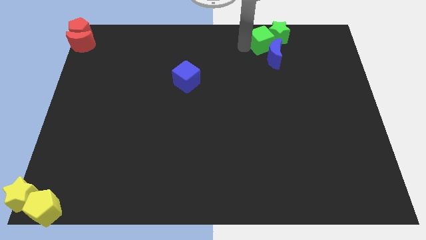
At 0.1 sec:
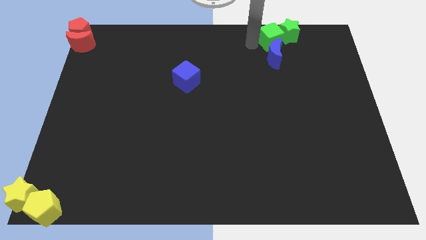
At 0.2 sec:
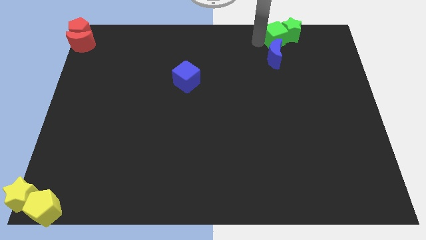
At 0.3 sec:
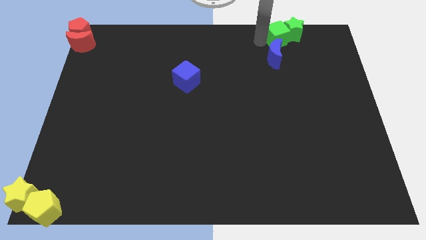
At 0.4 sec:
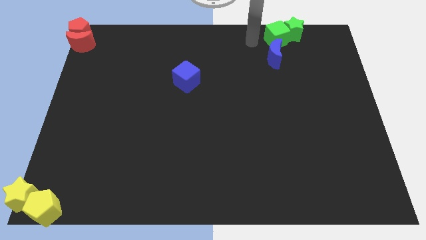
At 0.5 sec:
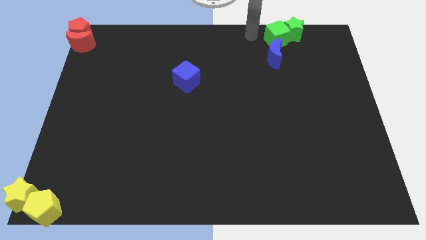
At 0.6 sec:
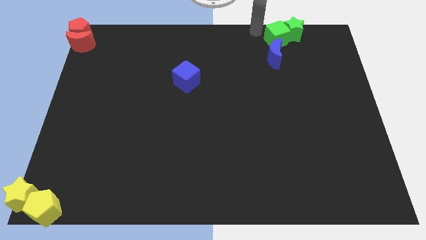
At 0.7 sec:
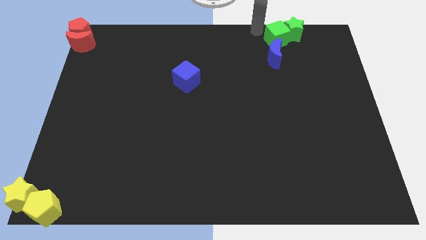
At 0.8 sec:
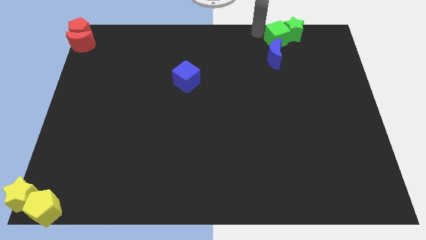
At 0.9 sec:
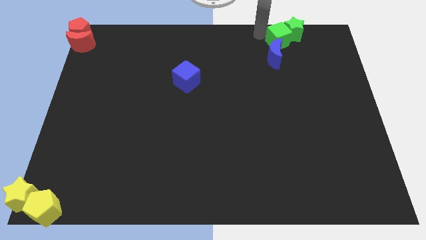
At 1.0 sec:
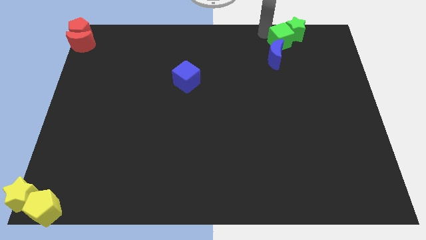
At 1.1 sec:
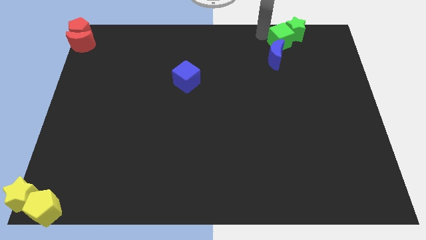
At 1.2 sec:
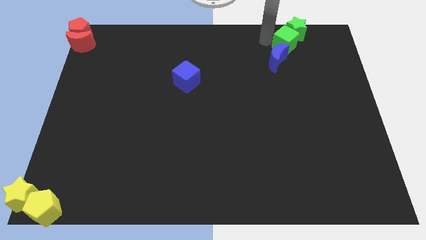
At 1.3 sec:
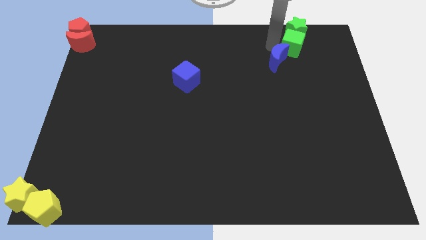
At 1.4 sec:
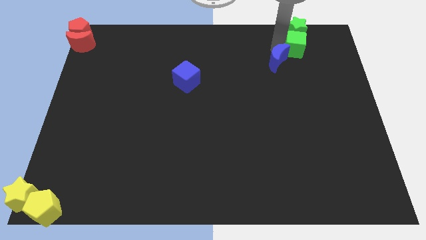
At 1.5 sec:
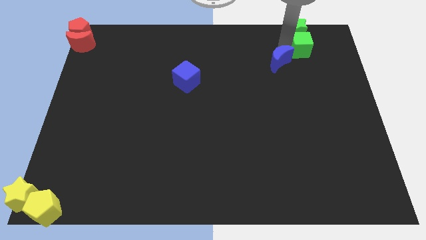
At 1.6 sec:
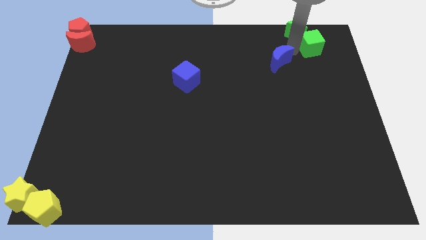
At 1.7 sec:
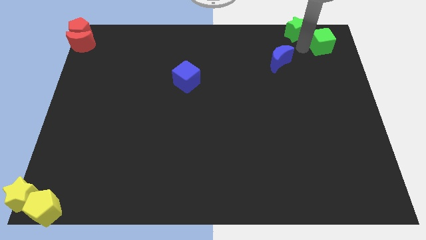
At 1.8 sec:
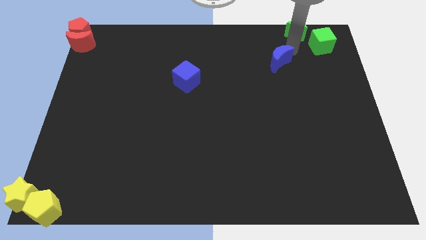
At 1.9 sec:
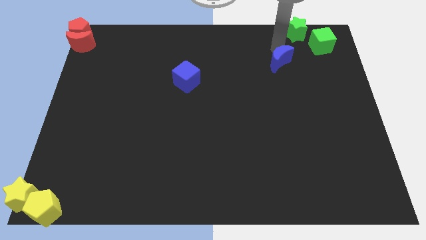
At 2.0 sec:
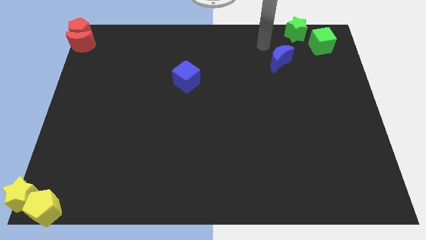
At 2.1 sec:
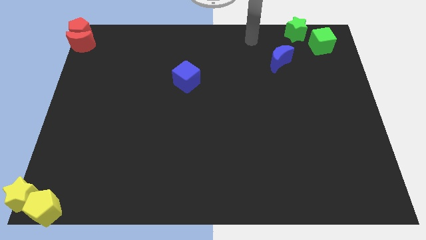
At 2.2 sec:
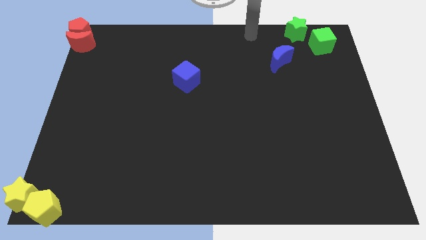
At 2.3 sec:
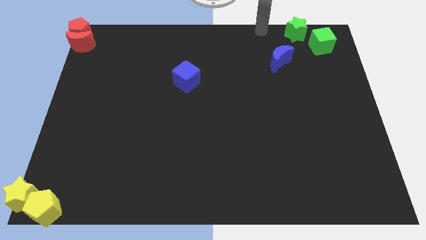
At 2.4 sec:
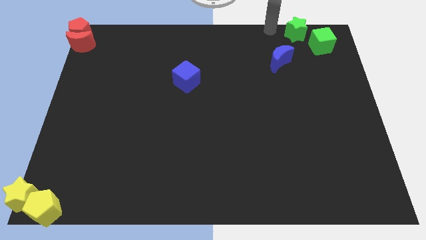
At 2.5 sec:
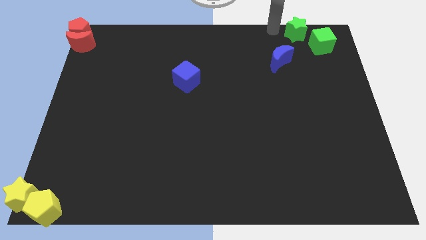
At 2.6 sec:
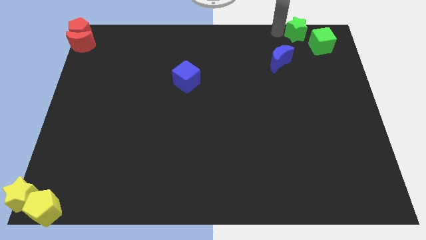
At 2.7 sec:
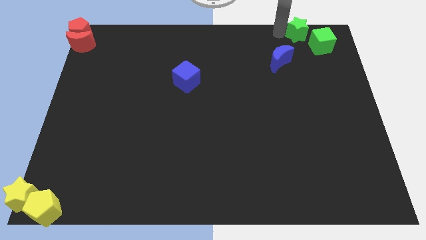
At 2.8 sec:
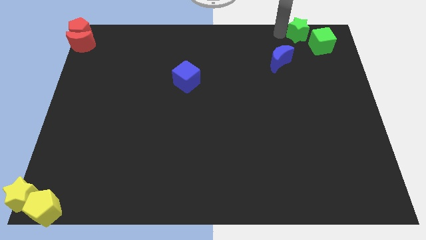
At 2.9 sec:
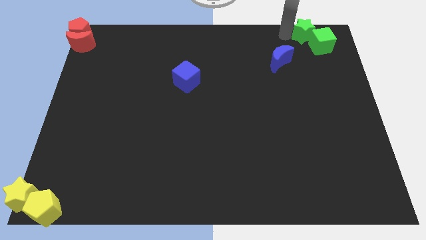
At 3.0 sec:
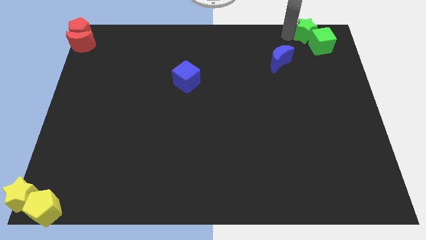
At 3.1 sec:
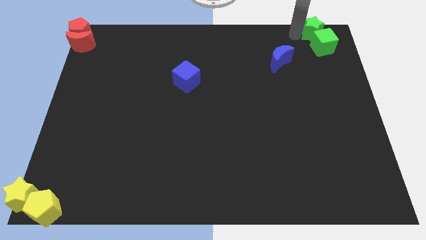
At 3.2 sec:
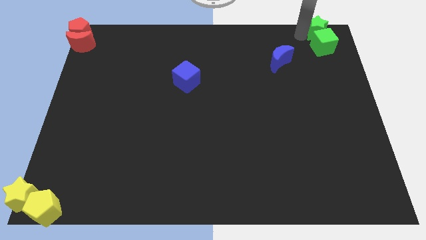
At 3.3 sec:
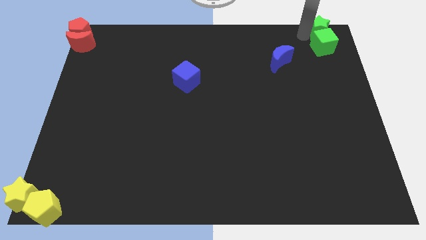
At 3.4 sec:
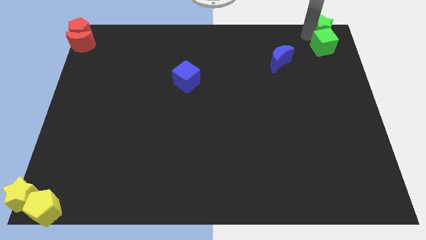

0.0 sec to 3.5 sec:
push the green cube and green star to the top right of the board

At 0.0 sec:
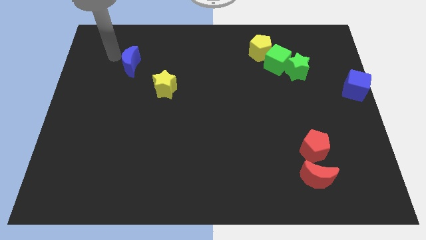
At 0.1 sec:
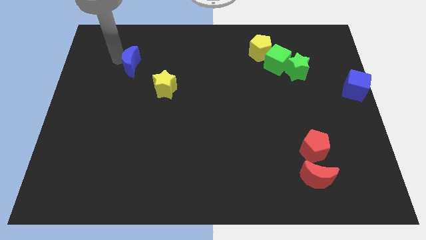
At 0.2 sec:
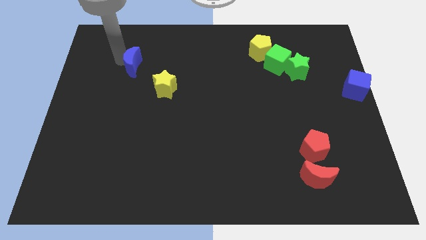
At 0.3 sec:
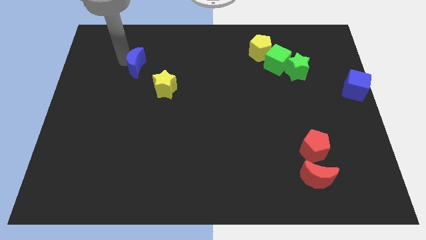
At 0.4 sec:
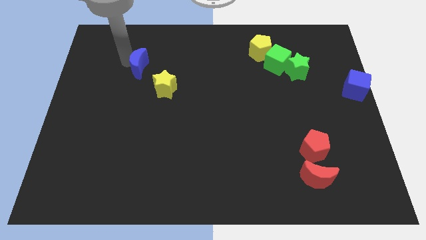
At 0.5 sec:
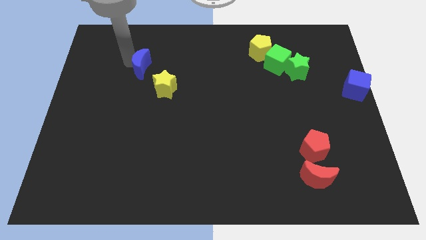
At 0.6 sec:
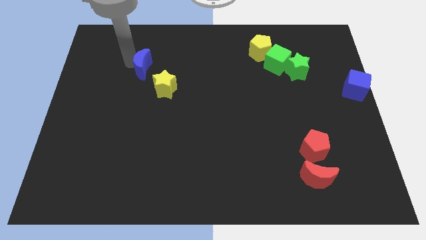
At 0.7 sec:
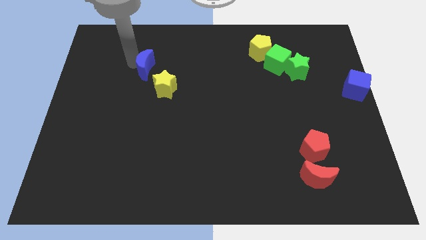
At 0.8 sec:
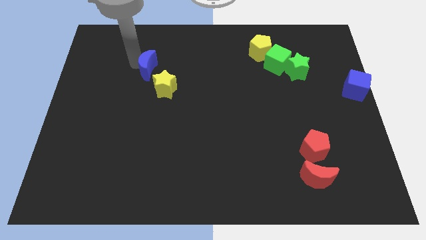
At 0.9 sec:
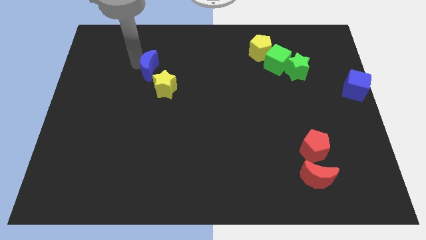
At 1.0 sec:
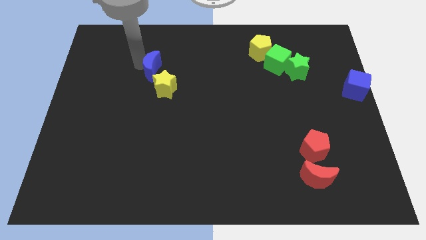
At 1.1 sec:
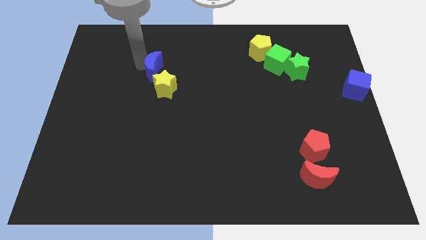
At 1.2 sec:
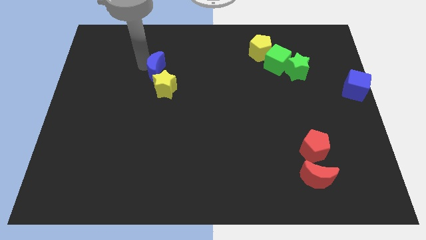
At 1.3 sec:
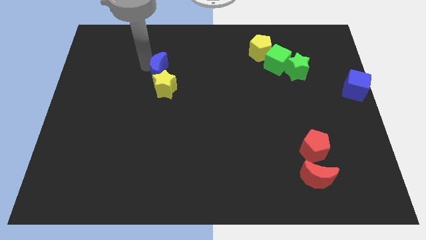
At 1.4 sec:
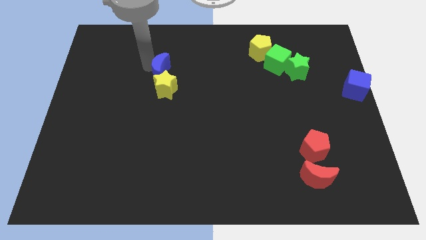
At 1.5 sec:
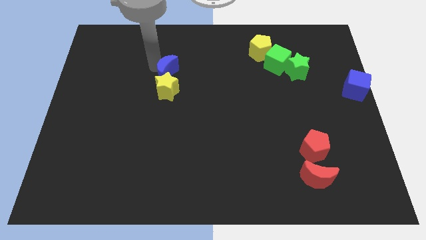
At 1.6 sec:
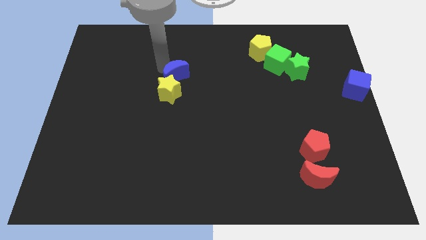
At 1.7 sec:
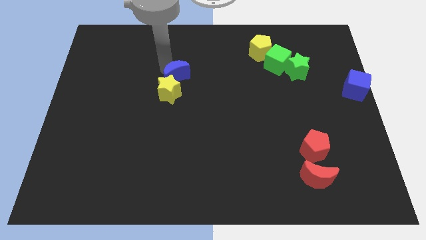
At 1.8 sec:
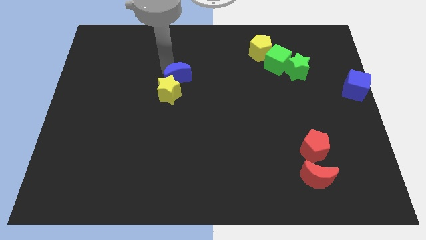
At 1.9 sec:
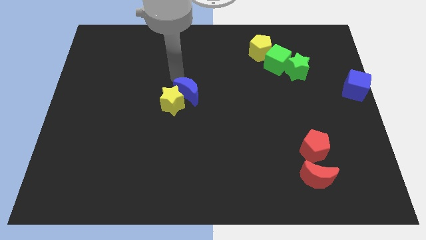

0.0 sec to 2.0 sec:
push the blue moon into the yellow star

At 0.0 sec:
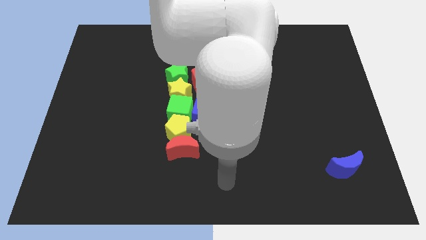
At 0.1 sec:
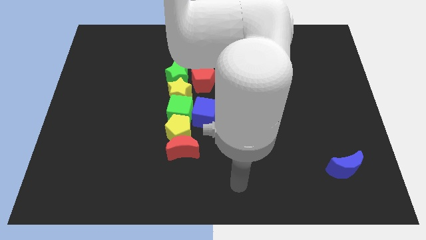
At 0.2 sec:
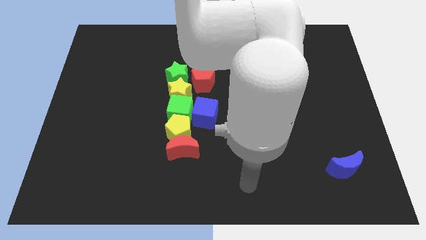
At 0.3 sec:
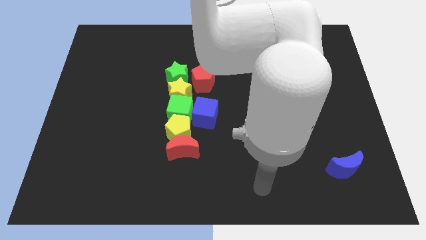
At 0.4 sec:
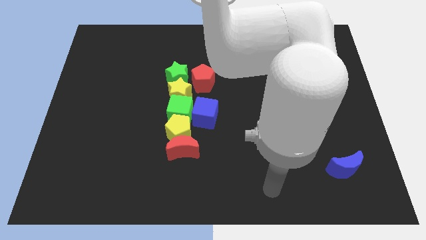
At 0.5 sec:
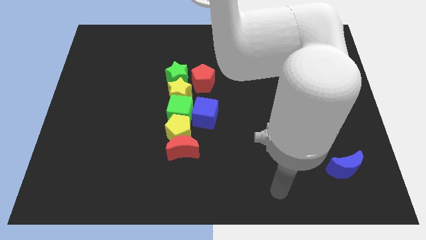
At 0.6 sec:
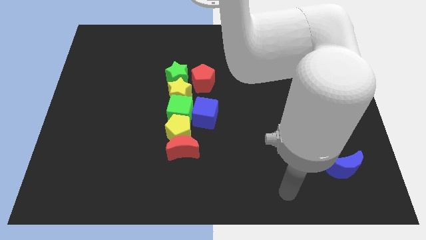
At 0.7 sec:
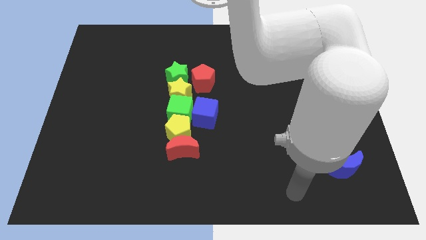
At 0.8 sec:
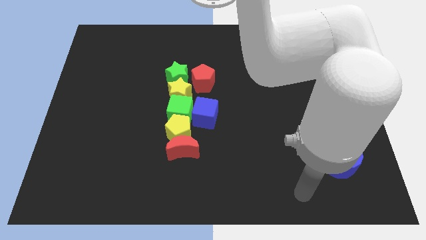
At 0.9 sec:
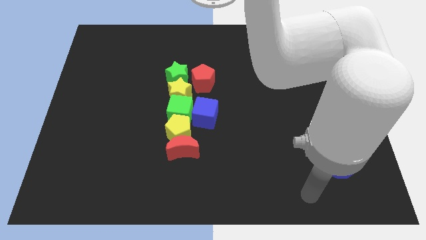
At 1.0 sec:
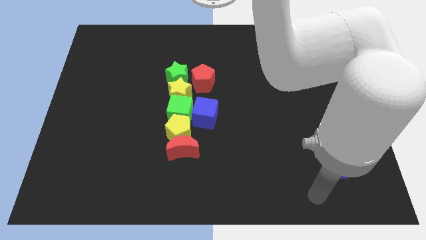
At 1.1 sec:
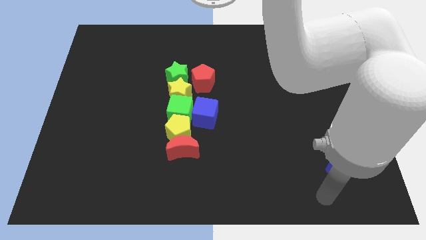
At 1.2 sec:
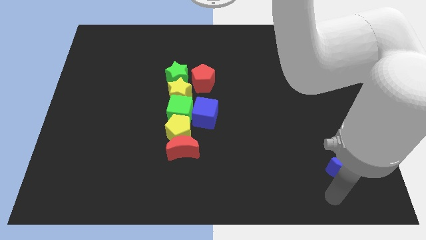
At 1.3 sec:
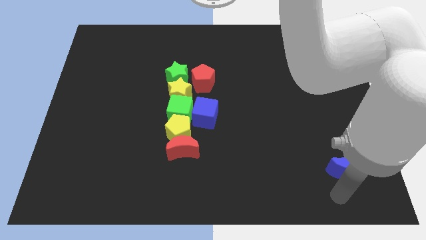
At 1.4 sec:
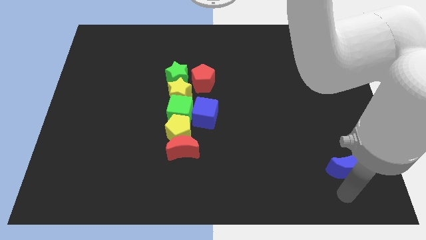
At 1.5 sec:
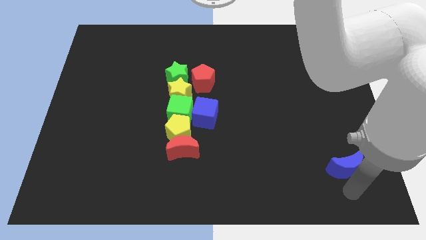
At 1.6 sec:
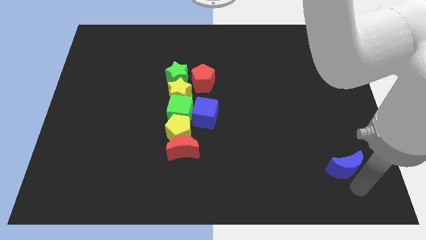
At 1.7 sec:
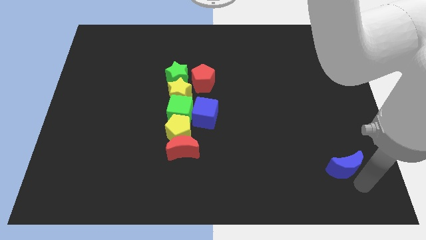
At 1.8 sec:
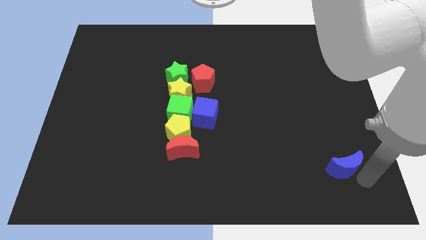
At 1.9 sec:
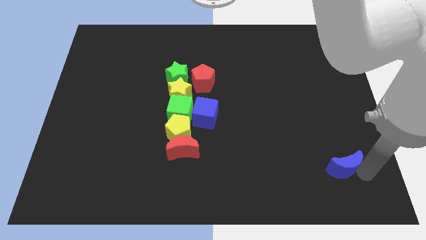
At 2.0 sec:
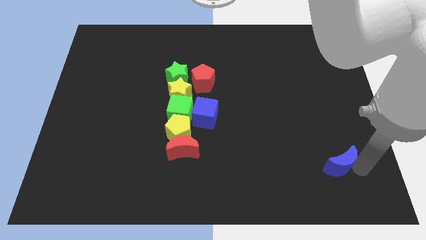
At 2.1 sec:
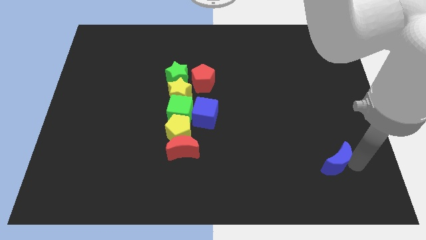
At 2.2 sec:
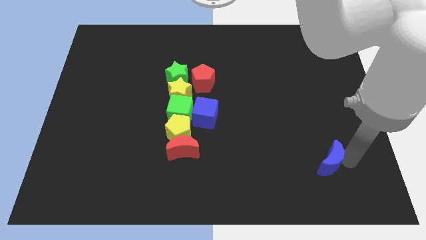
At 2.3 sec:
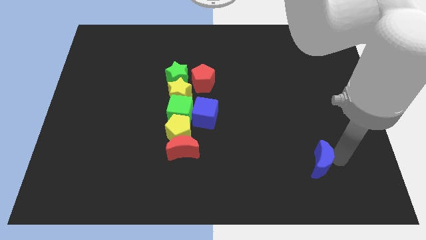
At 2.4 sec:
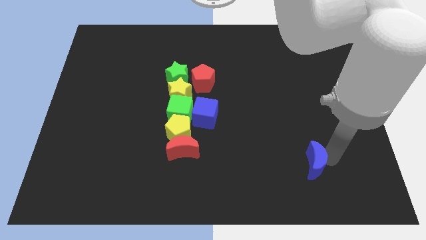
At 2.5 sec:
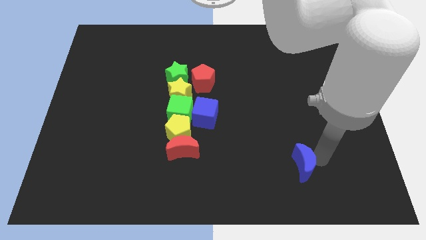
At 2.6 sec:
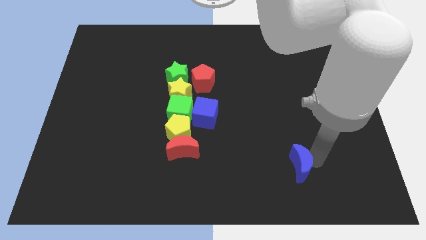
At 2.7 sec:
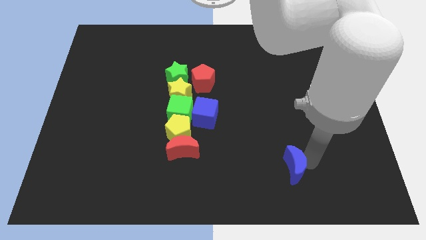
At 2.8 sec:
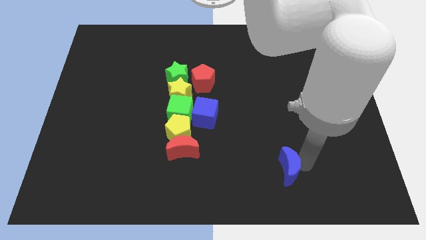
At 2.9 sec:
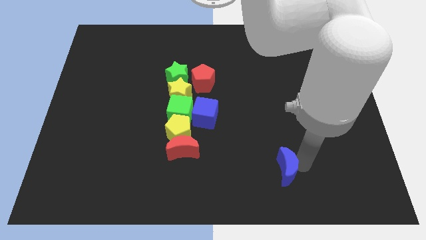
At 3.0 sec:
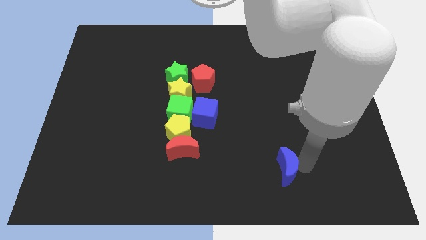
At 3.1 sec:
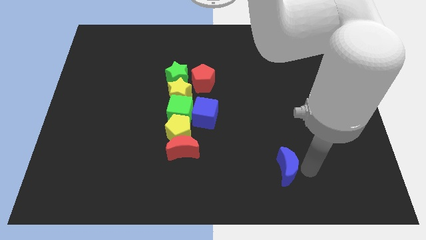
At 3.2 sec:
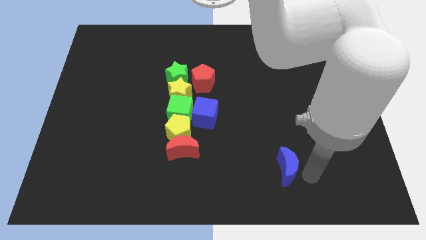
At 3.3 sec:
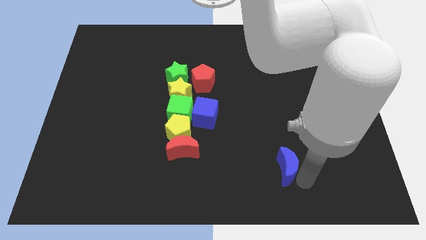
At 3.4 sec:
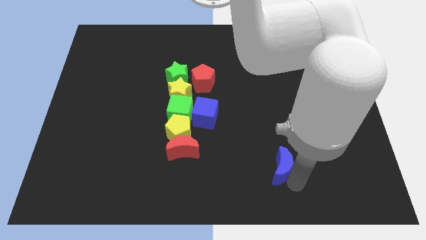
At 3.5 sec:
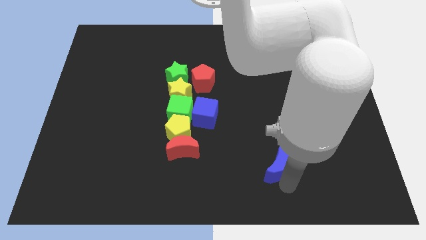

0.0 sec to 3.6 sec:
place the blue moon diagonally to blue cube

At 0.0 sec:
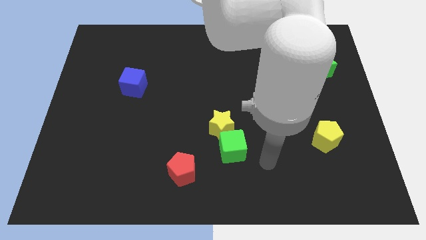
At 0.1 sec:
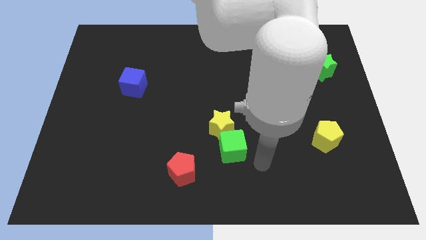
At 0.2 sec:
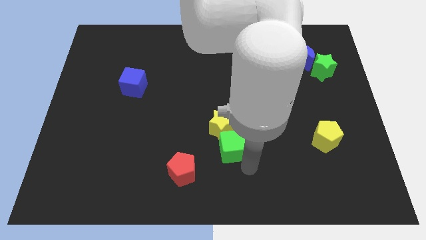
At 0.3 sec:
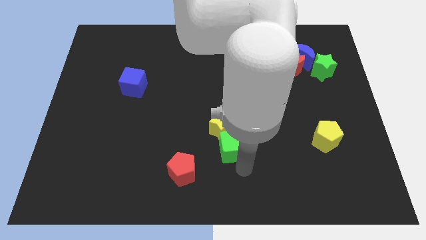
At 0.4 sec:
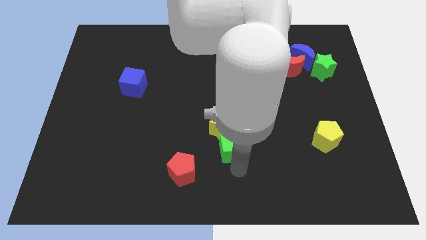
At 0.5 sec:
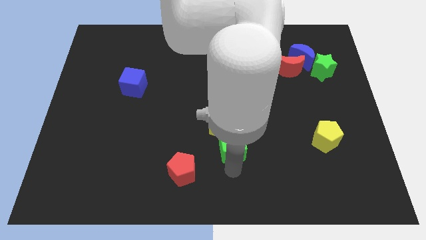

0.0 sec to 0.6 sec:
go near the green cube
